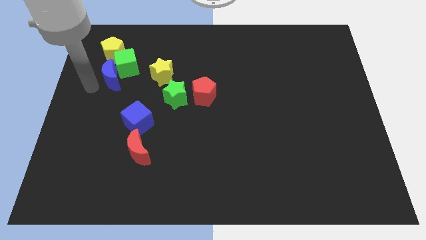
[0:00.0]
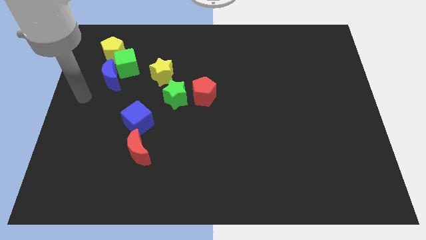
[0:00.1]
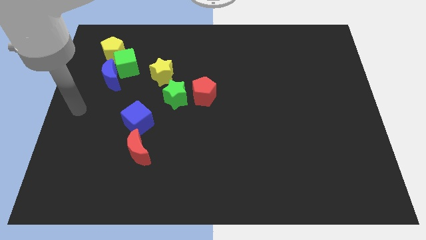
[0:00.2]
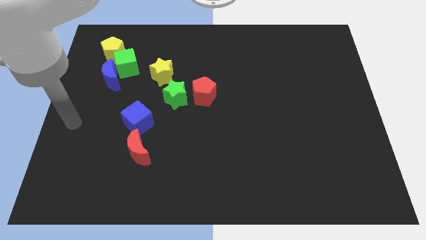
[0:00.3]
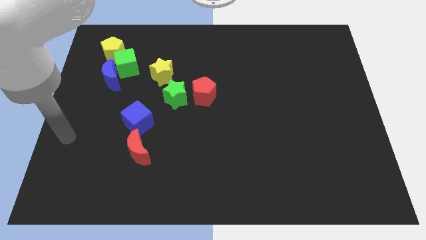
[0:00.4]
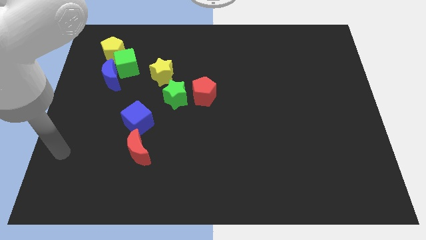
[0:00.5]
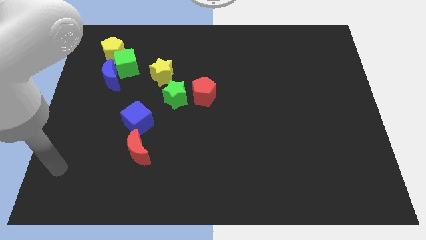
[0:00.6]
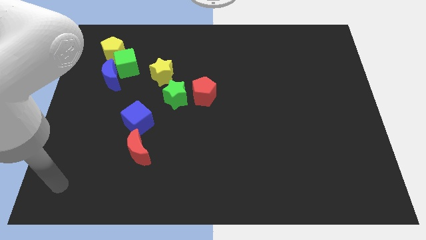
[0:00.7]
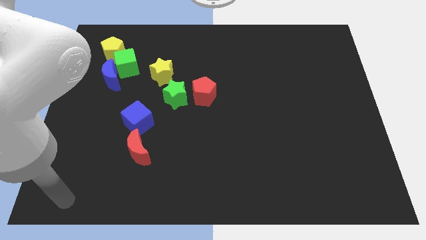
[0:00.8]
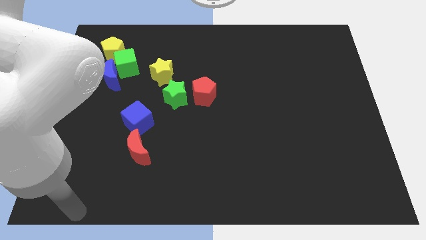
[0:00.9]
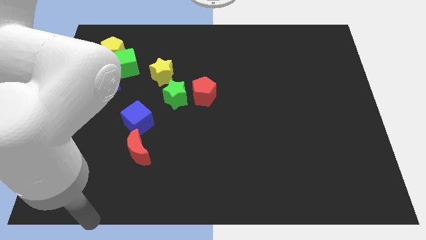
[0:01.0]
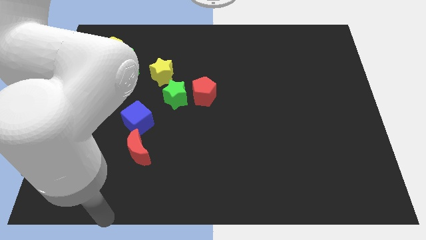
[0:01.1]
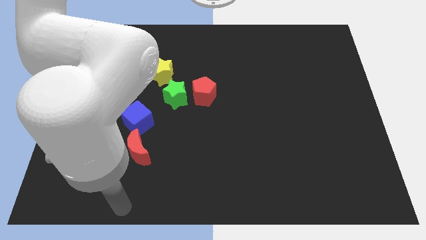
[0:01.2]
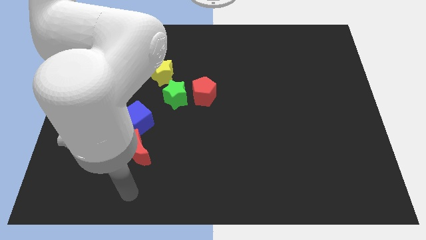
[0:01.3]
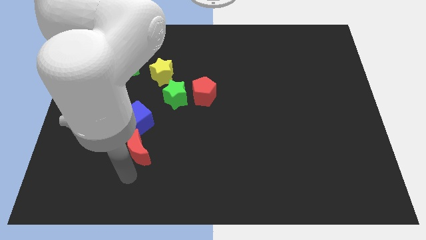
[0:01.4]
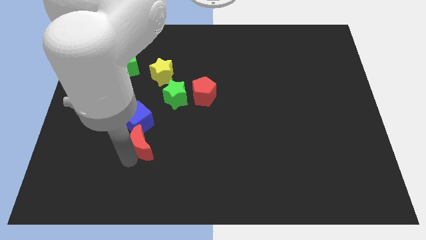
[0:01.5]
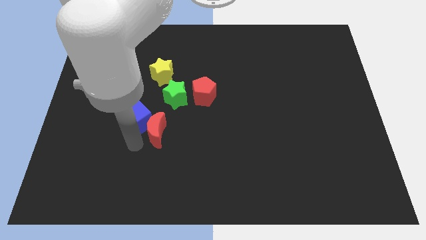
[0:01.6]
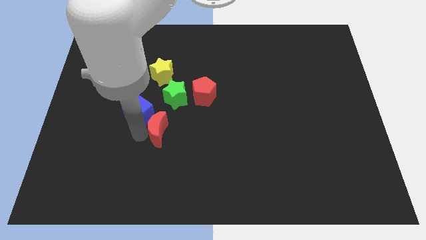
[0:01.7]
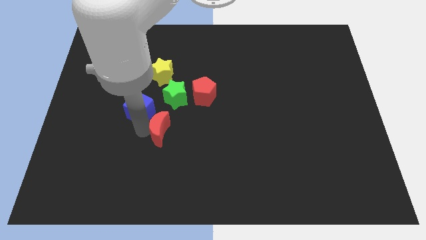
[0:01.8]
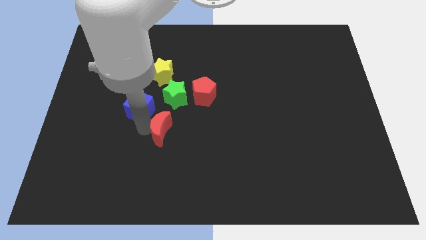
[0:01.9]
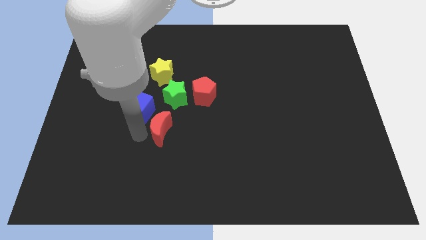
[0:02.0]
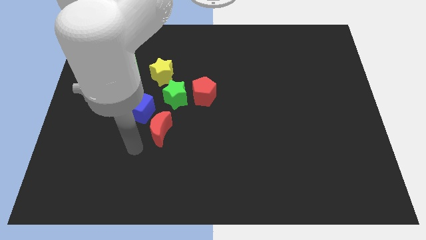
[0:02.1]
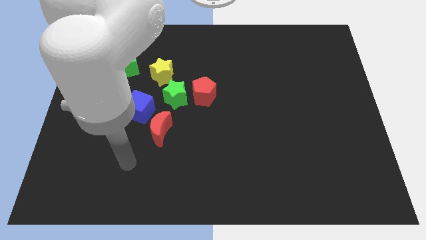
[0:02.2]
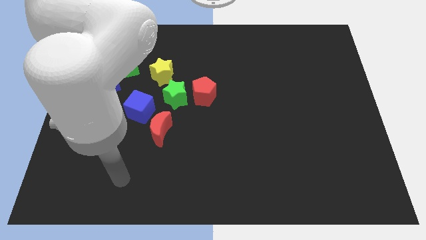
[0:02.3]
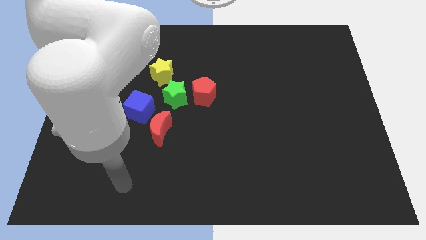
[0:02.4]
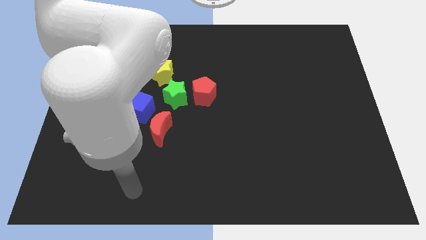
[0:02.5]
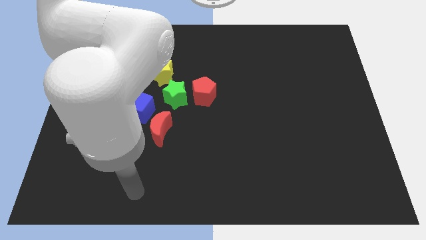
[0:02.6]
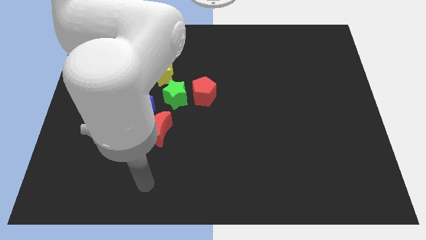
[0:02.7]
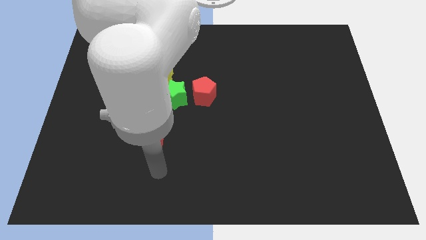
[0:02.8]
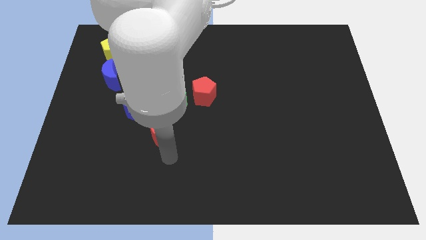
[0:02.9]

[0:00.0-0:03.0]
separate the blue cube from the red crescent

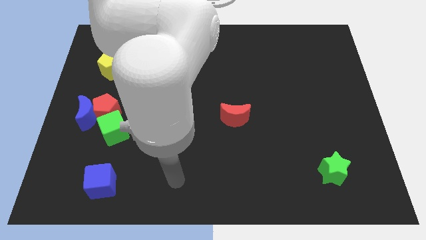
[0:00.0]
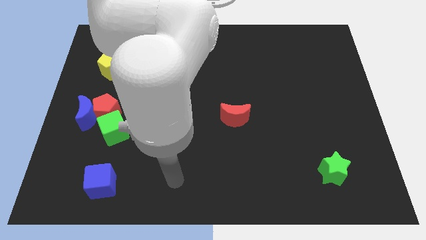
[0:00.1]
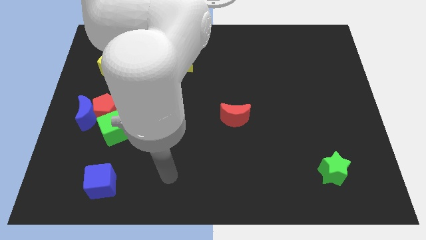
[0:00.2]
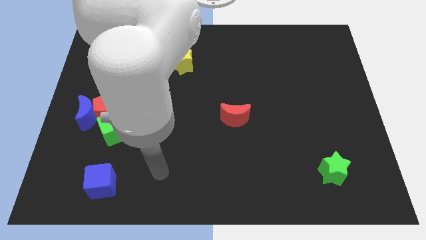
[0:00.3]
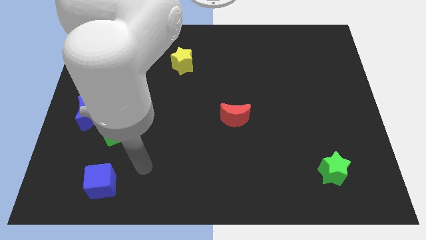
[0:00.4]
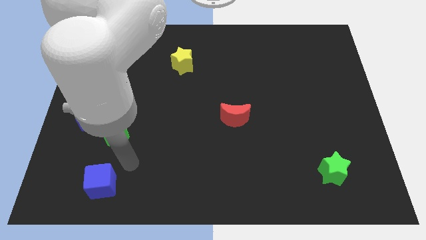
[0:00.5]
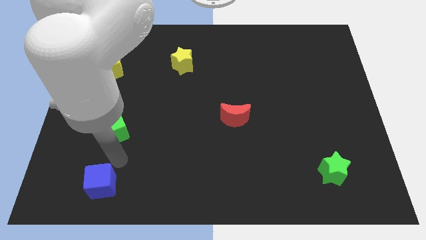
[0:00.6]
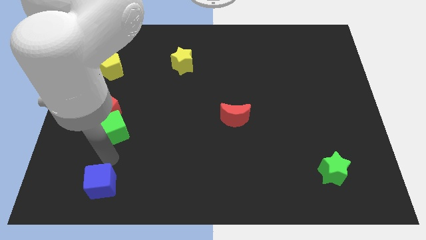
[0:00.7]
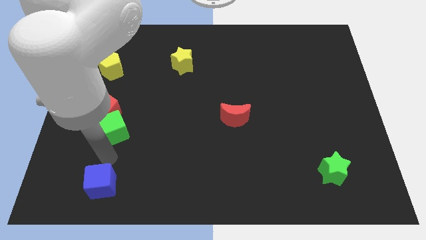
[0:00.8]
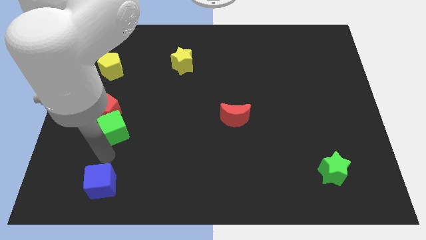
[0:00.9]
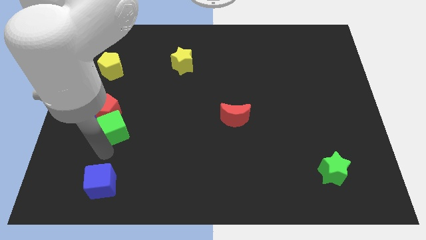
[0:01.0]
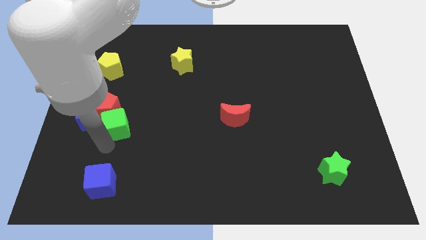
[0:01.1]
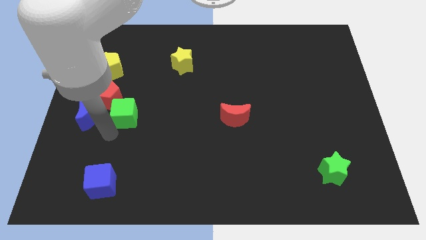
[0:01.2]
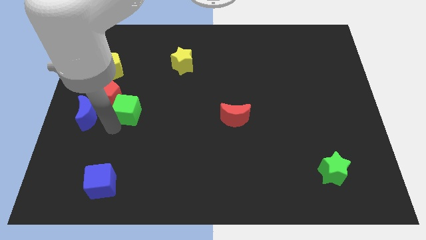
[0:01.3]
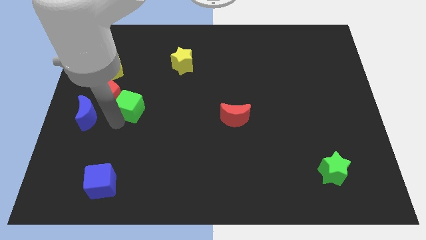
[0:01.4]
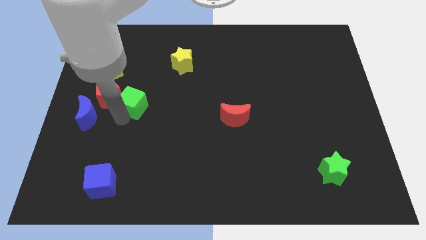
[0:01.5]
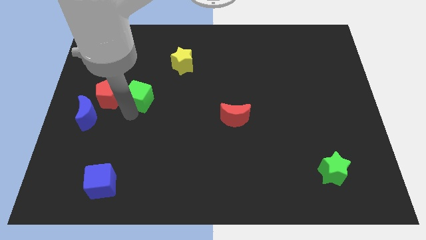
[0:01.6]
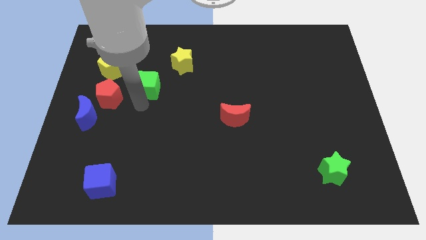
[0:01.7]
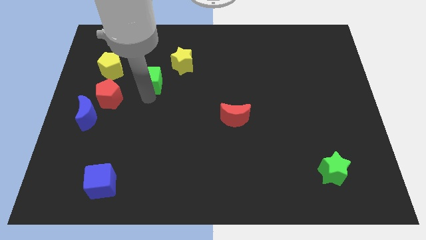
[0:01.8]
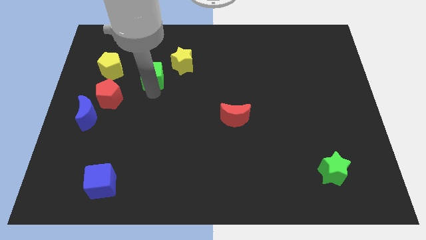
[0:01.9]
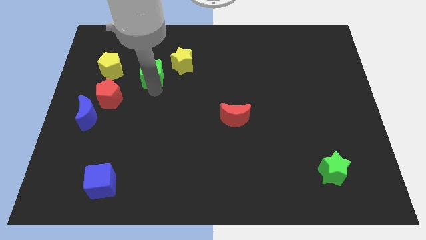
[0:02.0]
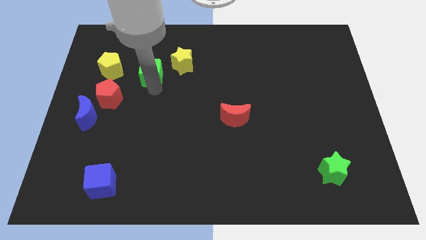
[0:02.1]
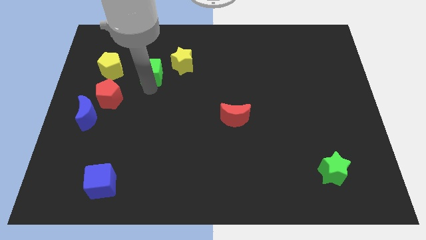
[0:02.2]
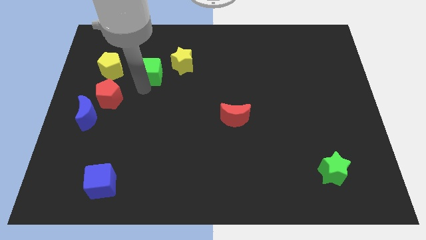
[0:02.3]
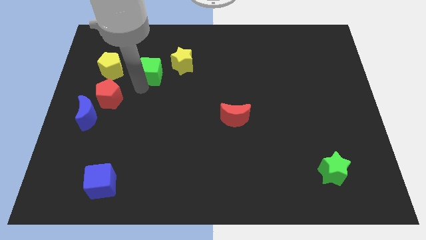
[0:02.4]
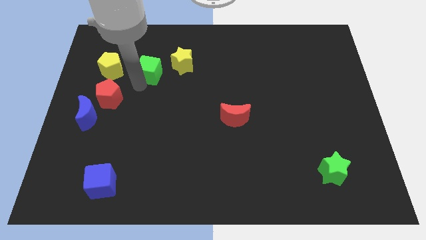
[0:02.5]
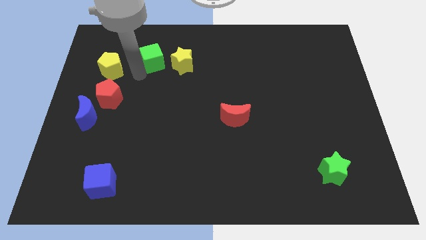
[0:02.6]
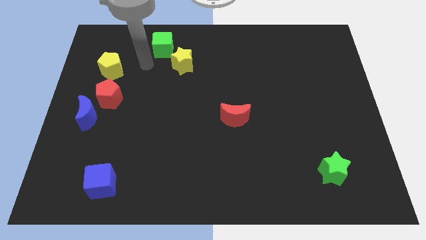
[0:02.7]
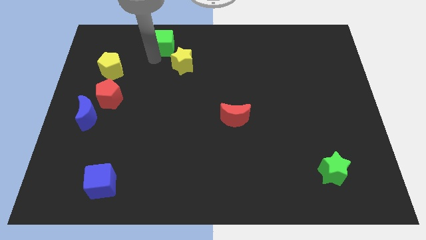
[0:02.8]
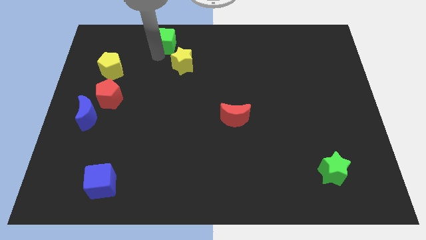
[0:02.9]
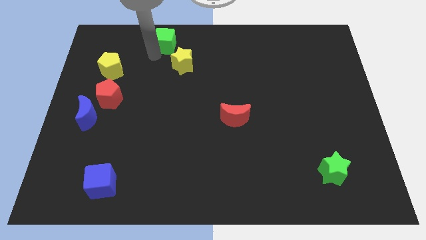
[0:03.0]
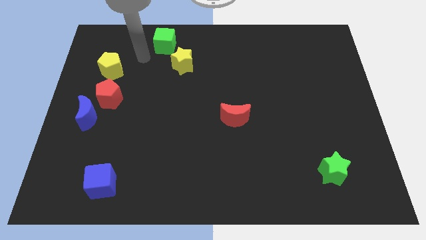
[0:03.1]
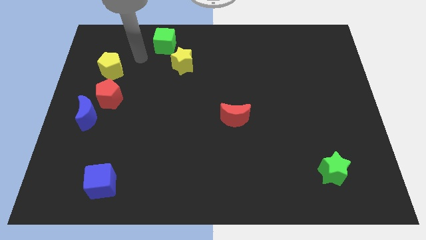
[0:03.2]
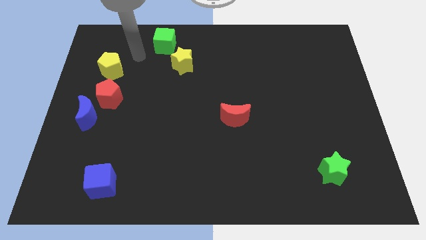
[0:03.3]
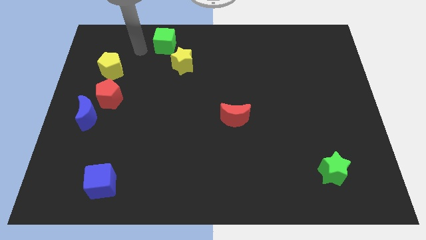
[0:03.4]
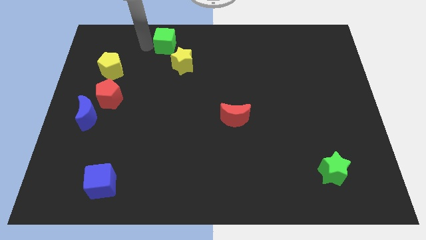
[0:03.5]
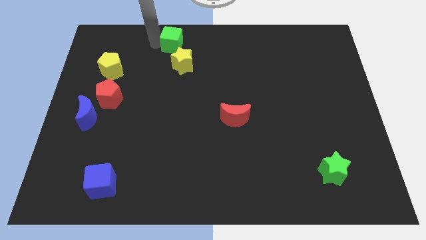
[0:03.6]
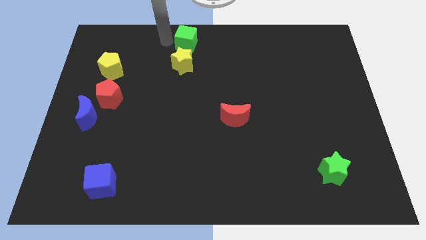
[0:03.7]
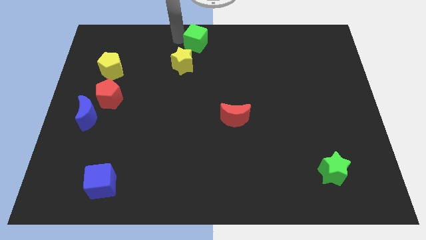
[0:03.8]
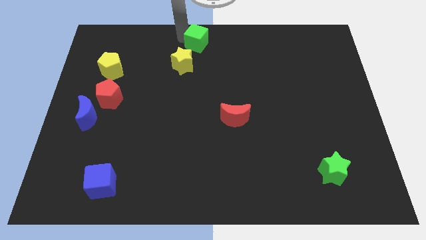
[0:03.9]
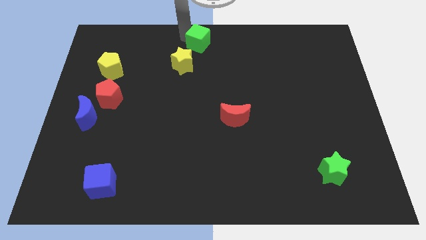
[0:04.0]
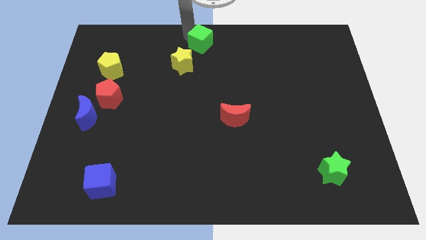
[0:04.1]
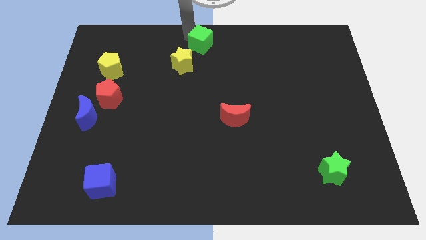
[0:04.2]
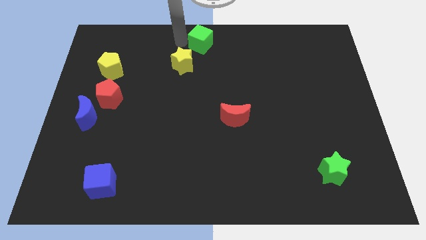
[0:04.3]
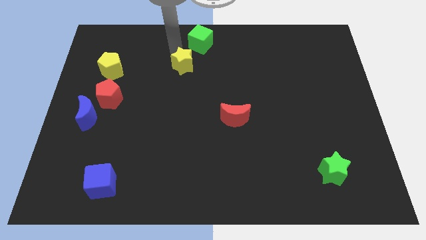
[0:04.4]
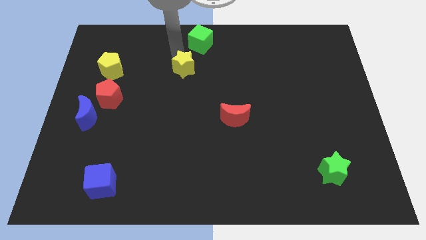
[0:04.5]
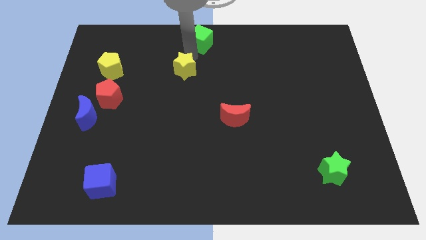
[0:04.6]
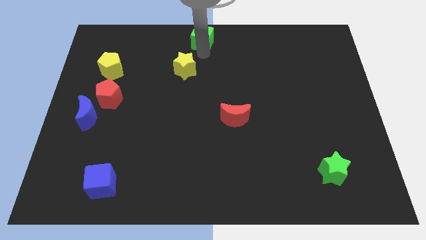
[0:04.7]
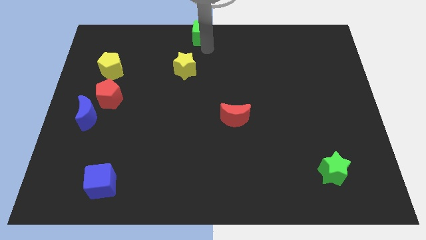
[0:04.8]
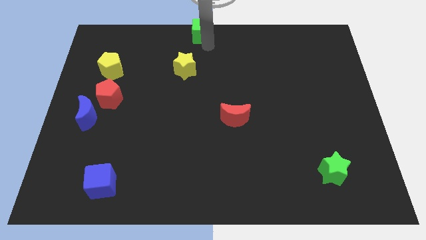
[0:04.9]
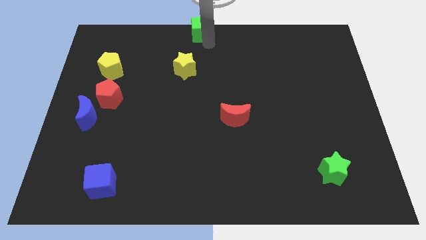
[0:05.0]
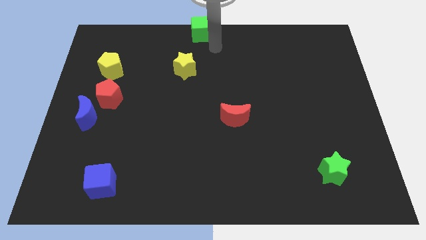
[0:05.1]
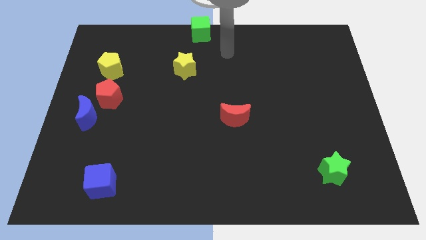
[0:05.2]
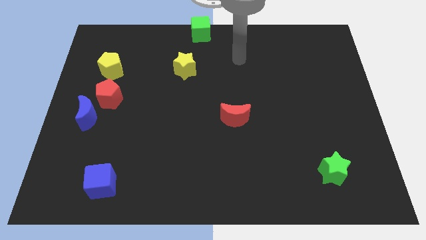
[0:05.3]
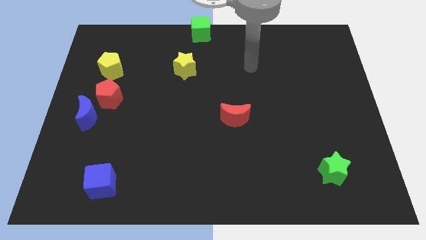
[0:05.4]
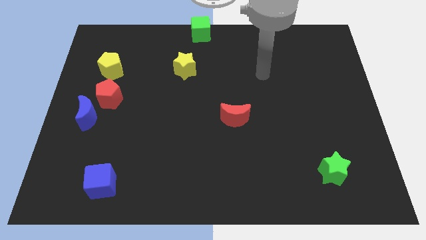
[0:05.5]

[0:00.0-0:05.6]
push the green cube towards the top center of the board

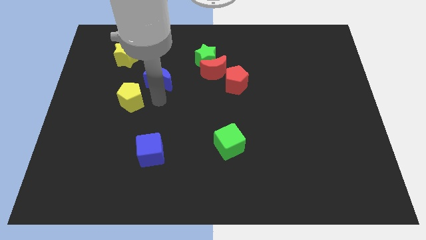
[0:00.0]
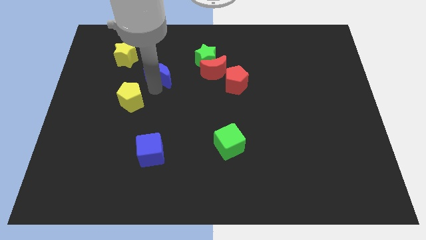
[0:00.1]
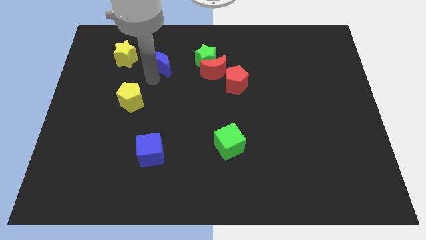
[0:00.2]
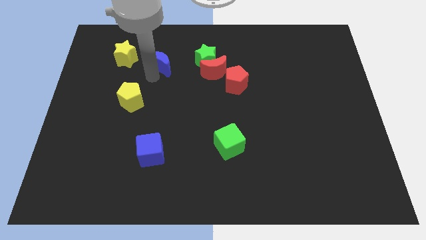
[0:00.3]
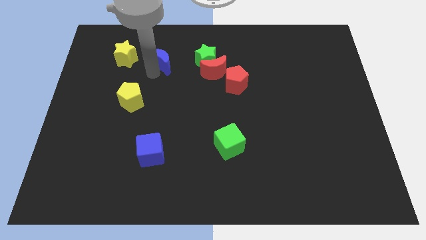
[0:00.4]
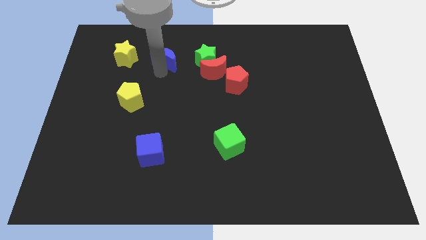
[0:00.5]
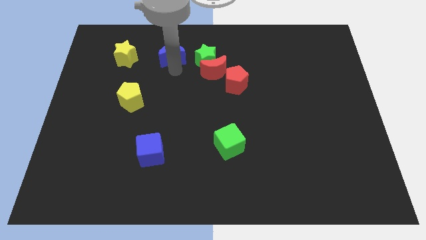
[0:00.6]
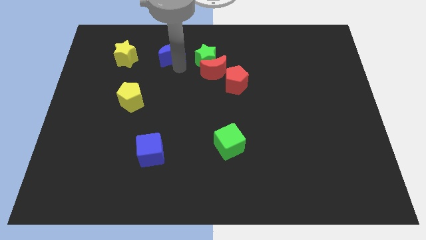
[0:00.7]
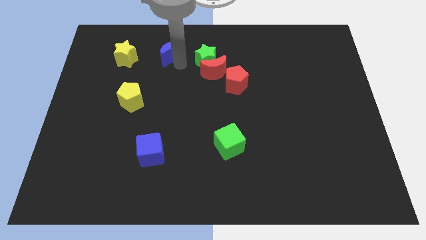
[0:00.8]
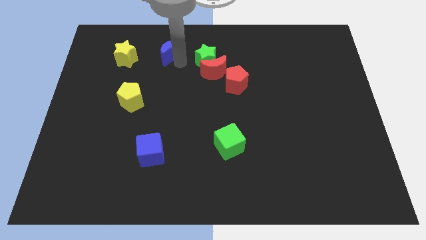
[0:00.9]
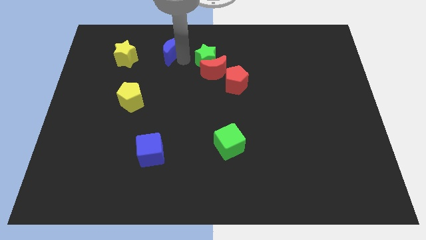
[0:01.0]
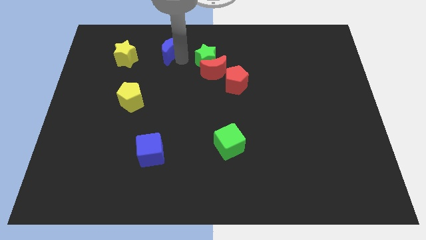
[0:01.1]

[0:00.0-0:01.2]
move the blue crescent slightly towards the top of the board
